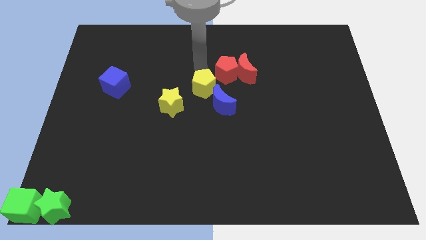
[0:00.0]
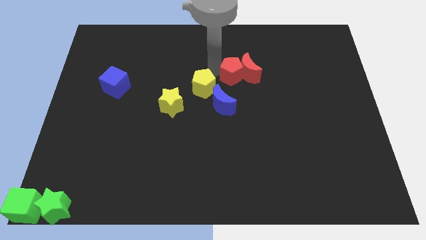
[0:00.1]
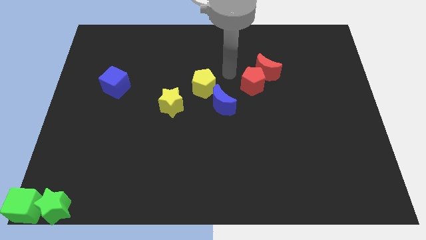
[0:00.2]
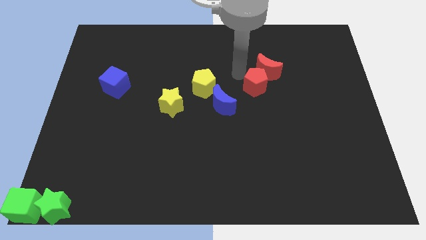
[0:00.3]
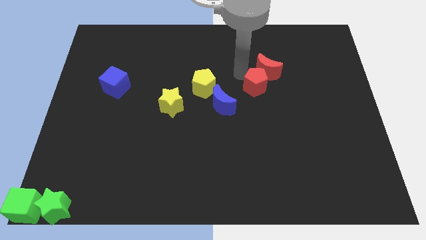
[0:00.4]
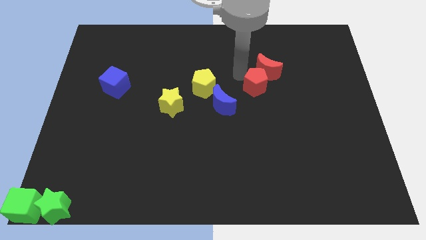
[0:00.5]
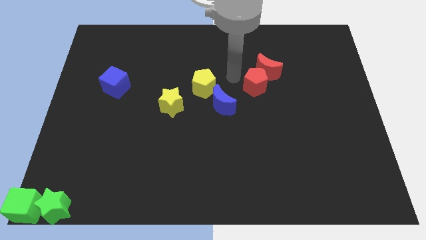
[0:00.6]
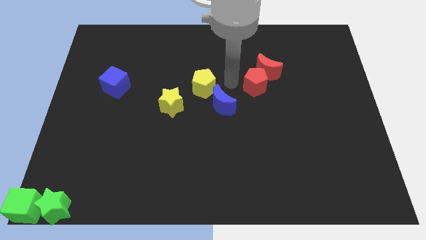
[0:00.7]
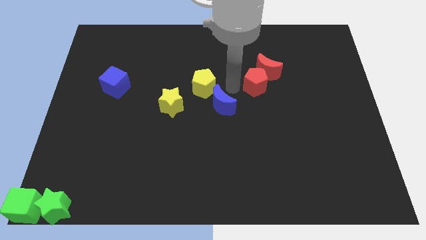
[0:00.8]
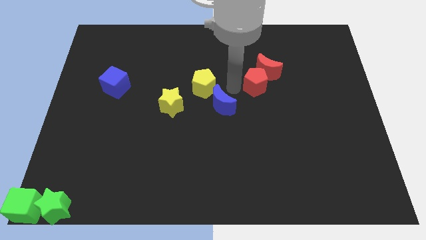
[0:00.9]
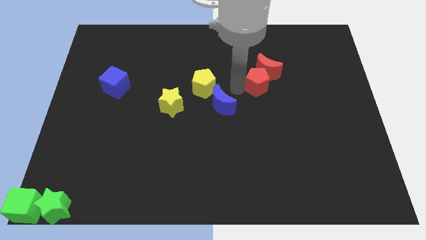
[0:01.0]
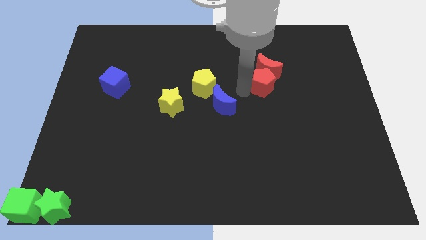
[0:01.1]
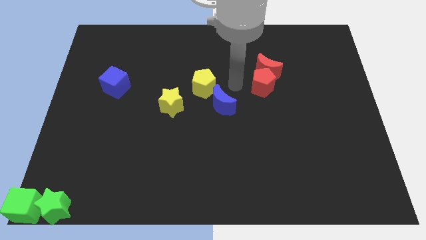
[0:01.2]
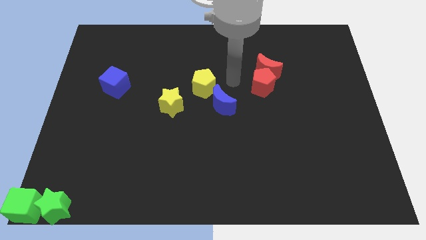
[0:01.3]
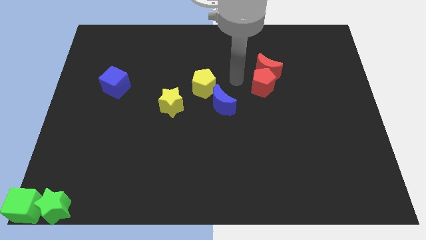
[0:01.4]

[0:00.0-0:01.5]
push the red pentagon and red crescent to the right side

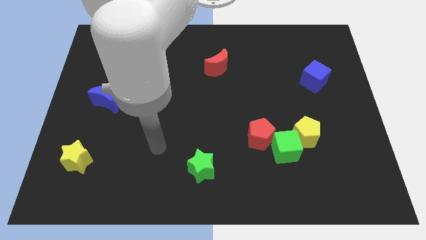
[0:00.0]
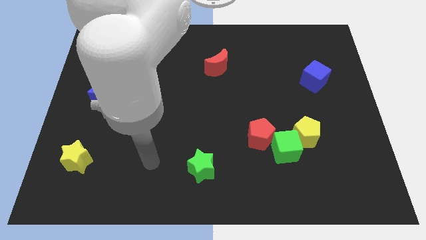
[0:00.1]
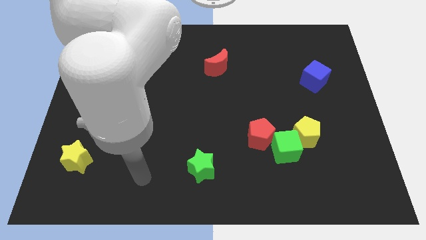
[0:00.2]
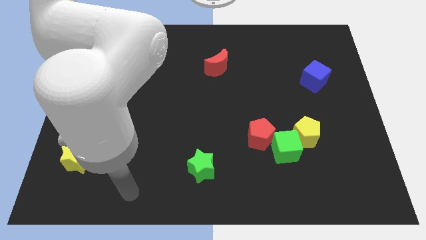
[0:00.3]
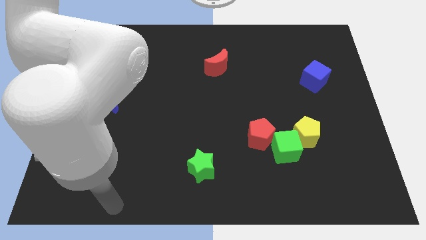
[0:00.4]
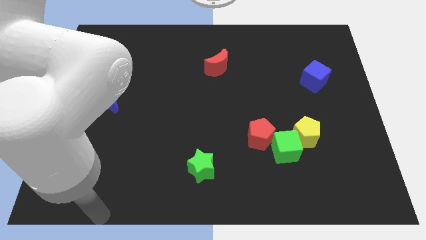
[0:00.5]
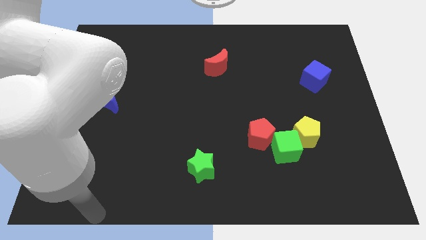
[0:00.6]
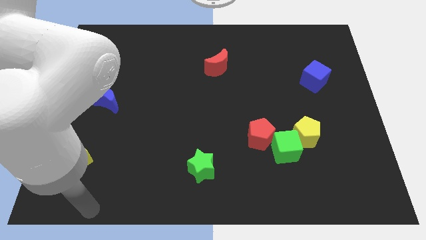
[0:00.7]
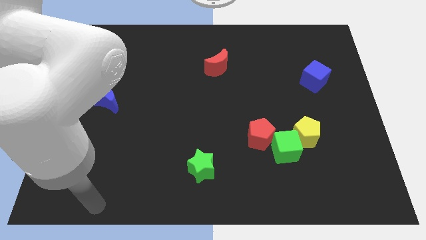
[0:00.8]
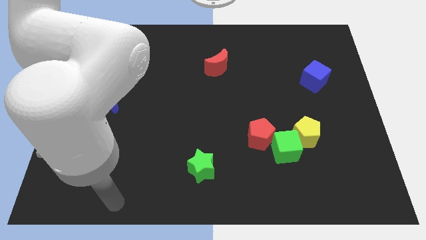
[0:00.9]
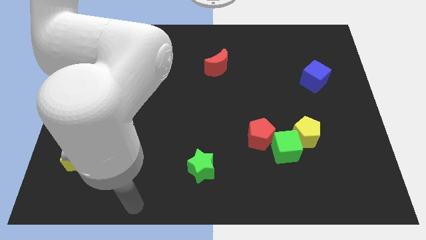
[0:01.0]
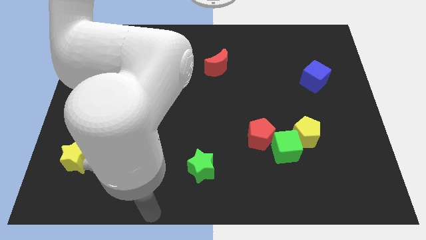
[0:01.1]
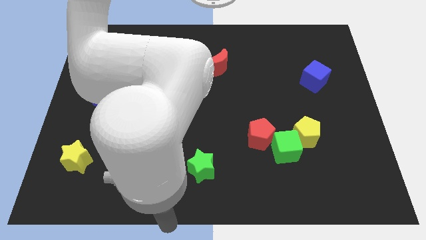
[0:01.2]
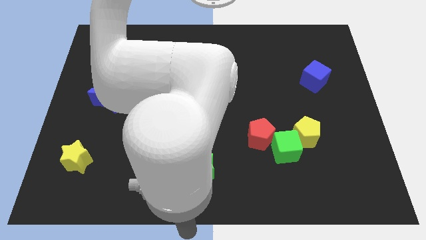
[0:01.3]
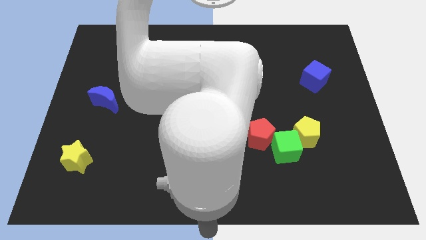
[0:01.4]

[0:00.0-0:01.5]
move your arm to the bottom center of the board

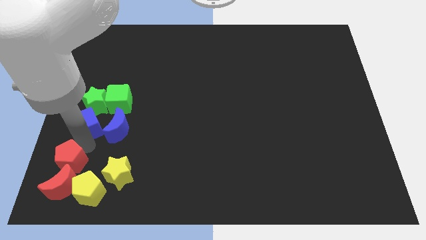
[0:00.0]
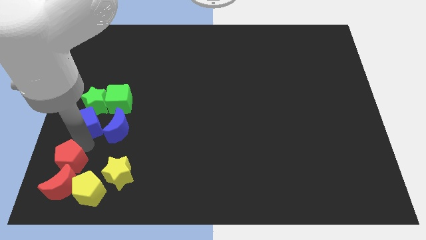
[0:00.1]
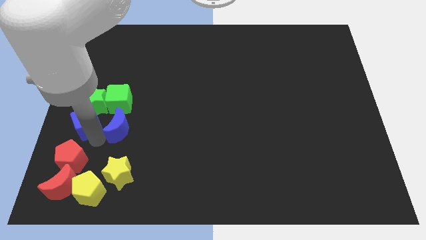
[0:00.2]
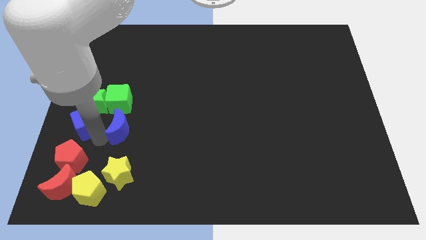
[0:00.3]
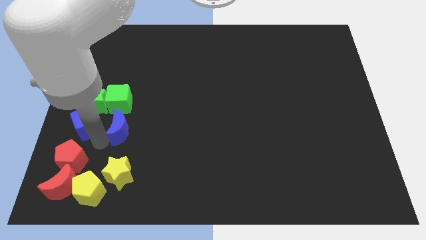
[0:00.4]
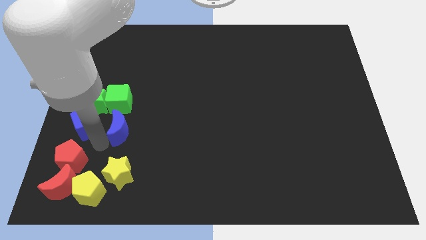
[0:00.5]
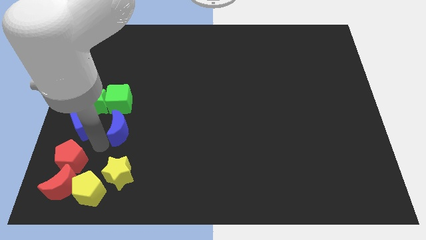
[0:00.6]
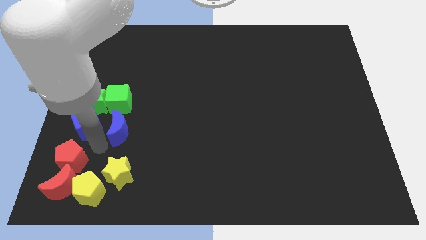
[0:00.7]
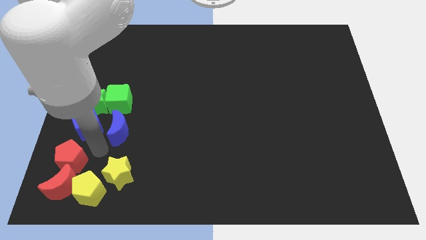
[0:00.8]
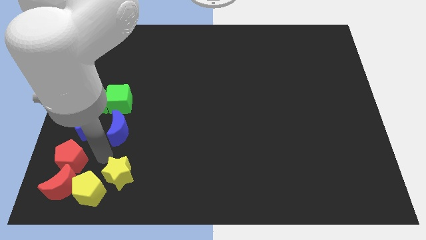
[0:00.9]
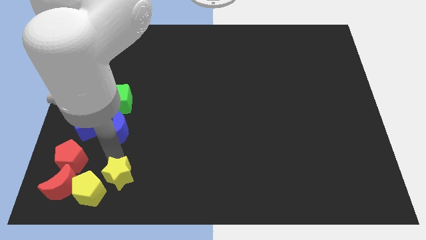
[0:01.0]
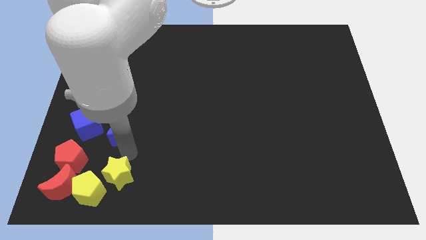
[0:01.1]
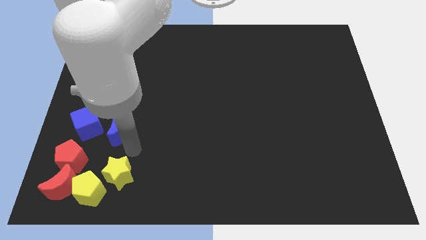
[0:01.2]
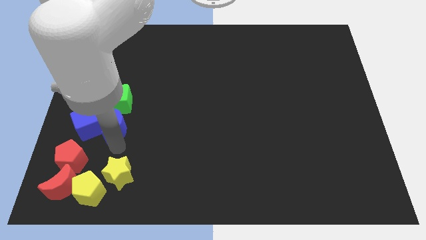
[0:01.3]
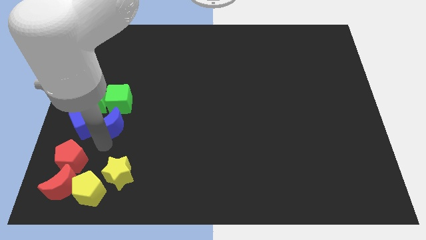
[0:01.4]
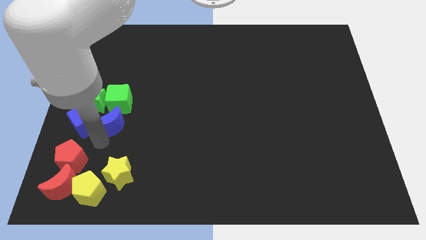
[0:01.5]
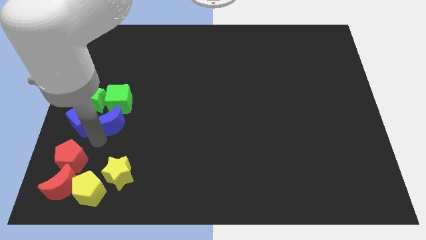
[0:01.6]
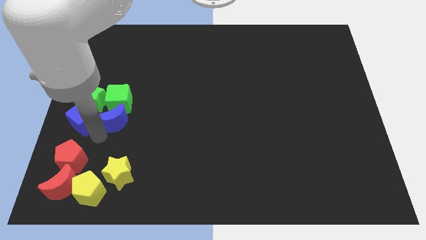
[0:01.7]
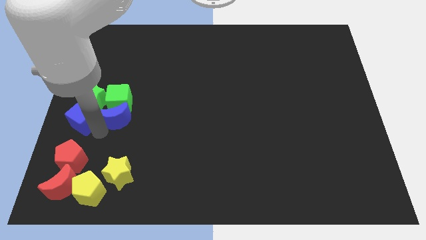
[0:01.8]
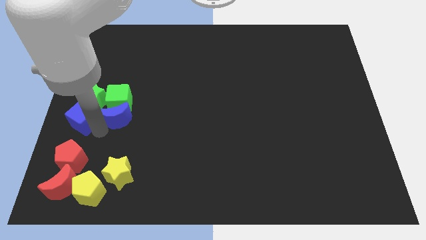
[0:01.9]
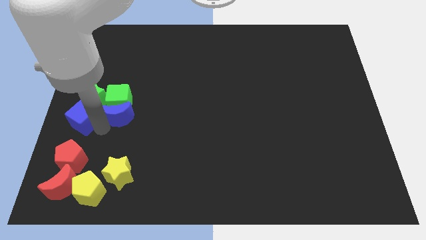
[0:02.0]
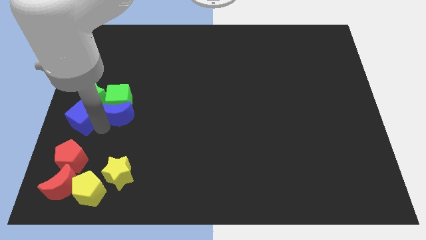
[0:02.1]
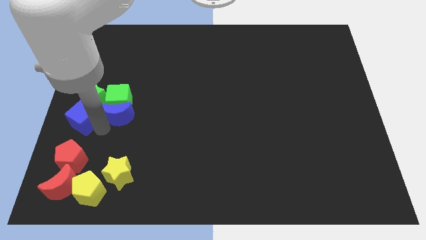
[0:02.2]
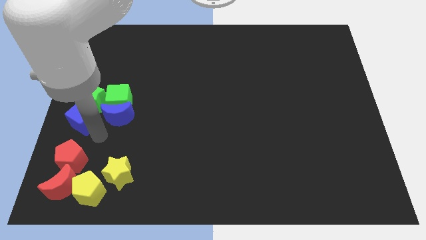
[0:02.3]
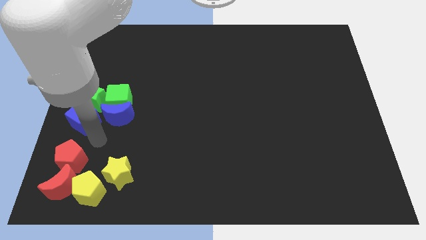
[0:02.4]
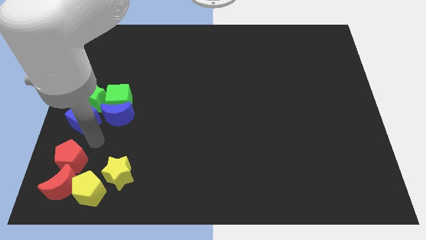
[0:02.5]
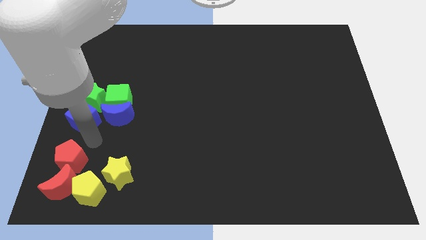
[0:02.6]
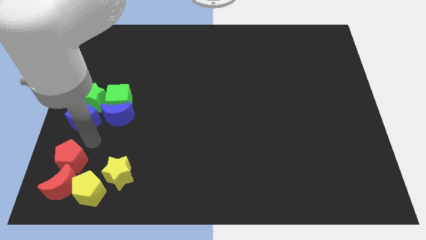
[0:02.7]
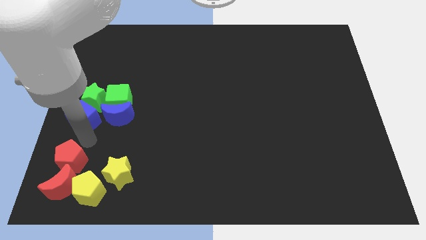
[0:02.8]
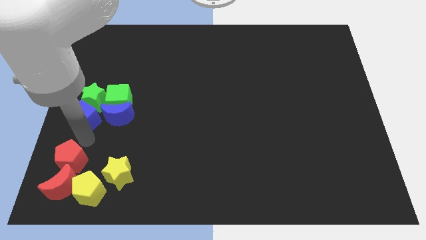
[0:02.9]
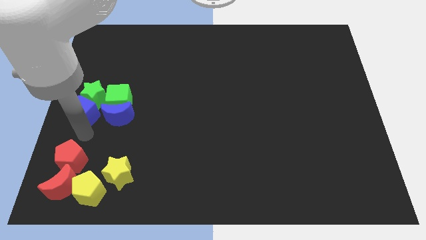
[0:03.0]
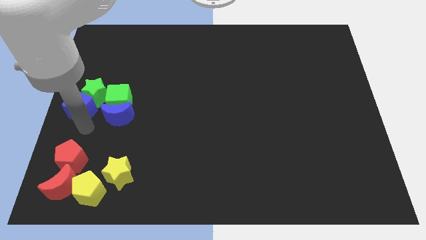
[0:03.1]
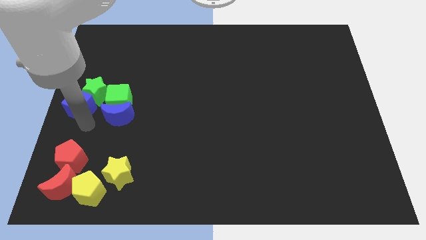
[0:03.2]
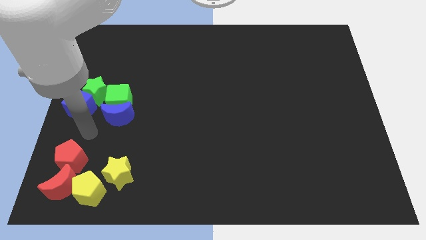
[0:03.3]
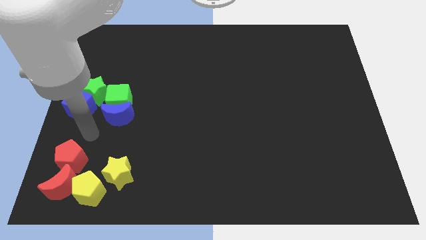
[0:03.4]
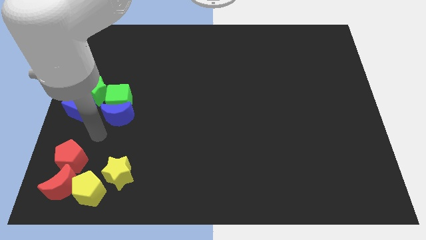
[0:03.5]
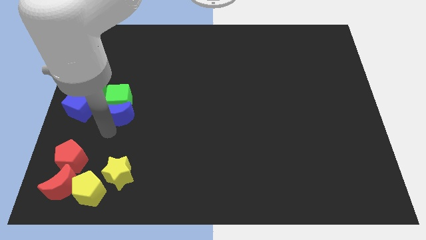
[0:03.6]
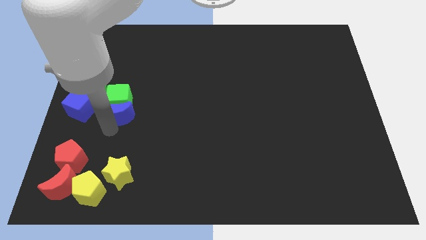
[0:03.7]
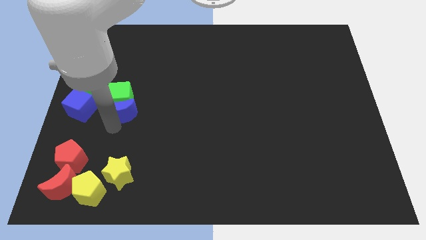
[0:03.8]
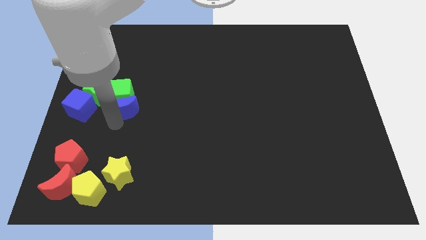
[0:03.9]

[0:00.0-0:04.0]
push the blue blocks and green things upwards

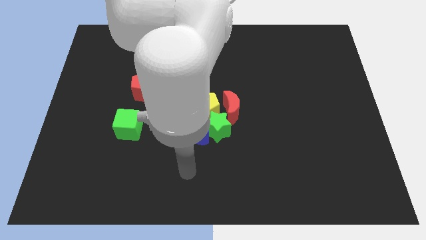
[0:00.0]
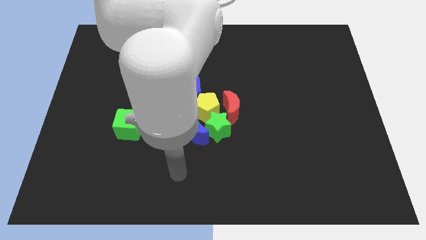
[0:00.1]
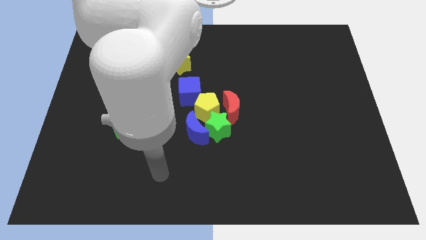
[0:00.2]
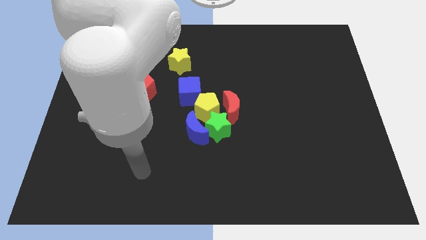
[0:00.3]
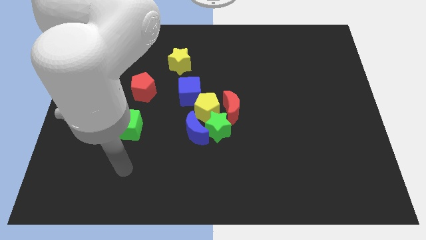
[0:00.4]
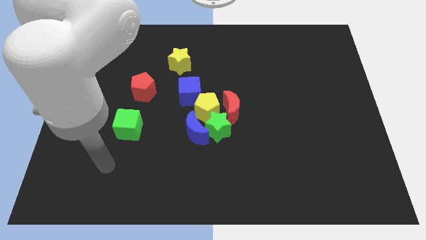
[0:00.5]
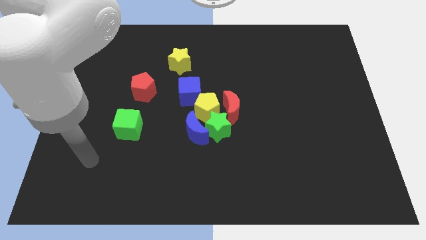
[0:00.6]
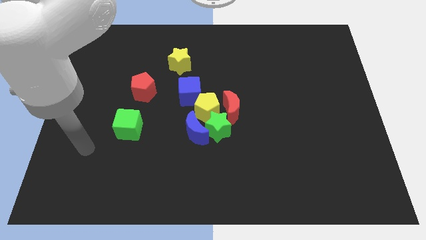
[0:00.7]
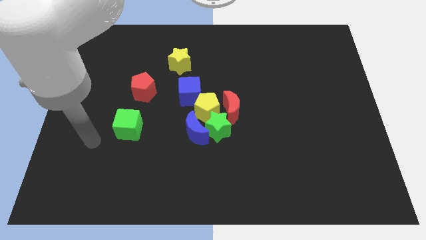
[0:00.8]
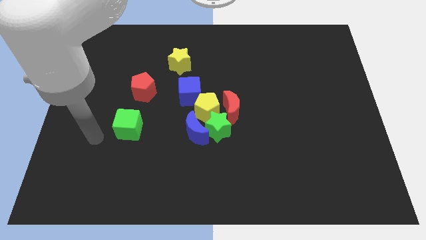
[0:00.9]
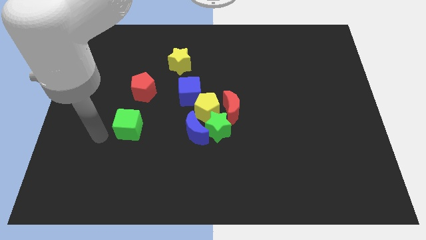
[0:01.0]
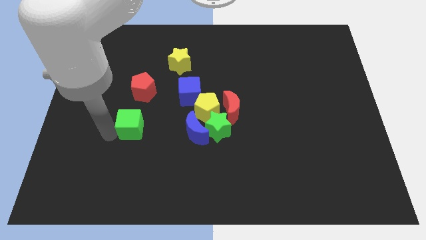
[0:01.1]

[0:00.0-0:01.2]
move your arm parallel left to the green cube

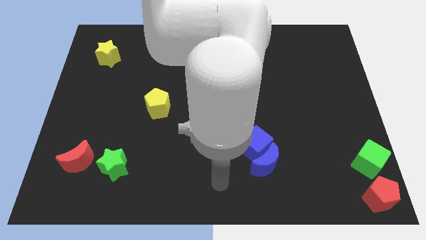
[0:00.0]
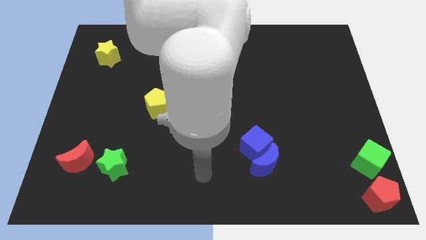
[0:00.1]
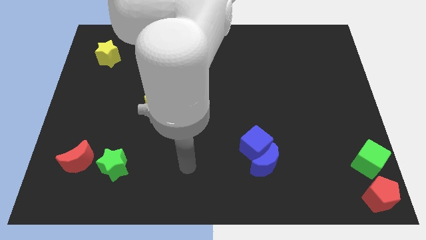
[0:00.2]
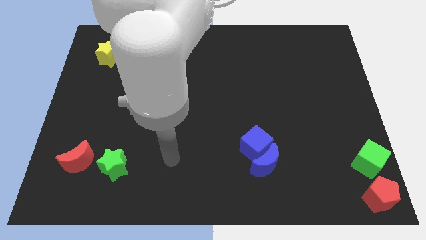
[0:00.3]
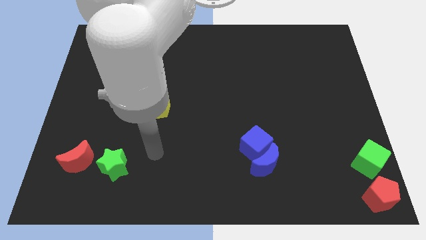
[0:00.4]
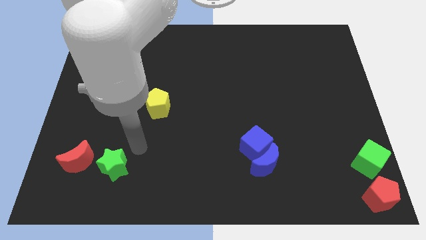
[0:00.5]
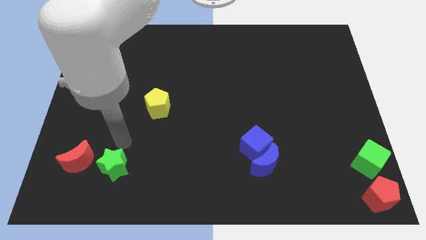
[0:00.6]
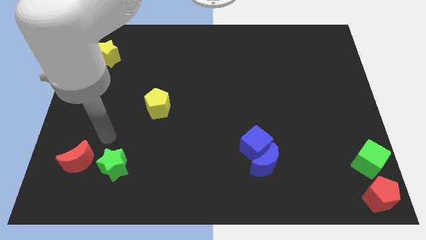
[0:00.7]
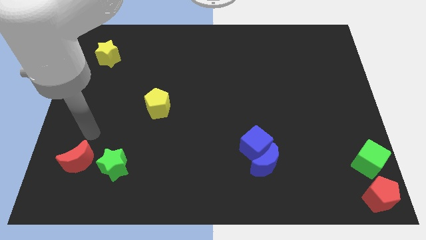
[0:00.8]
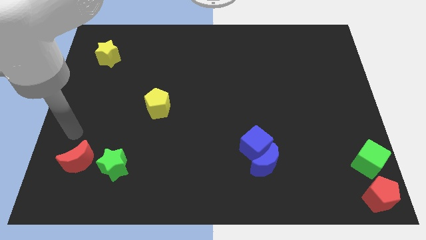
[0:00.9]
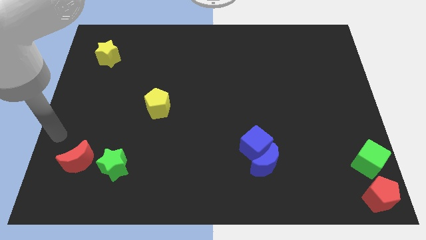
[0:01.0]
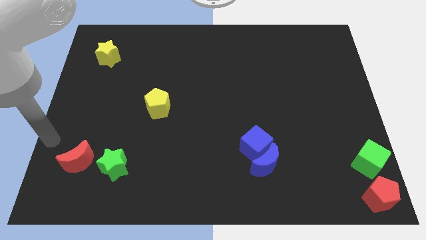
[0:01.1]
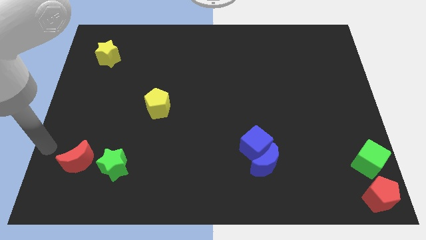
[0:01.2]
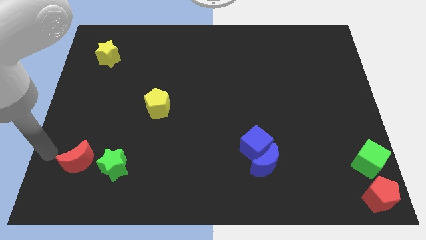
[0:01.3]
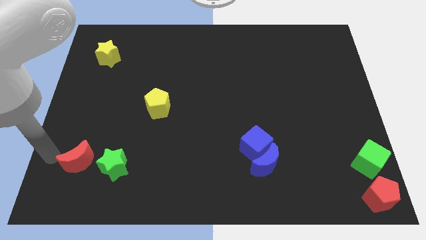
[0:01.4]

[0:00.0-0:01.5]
point your arm to the left side of red moon
